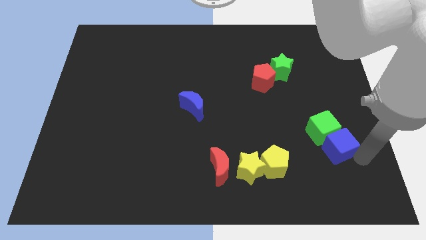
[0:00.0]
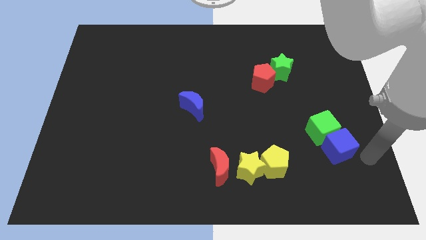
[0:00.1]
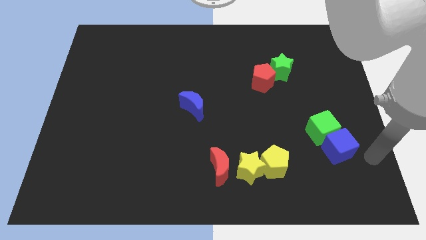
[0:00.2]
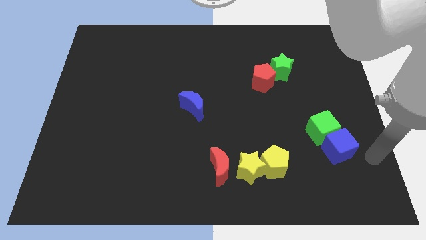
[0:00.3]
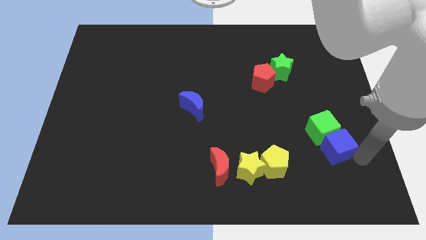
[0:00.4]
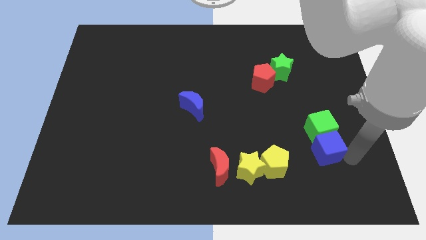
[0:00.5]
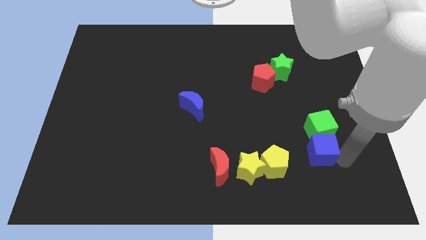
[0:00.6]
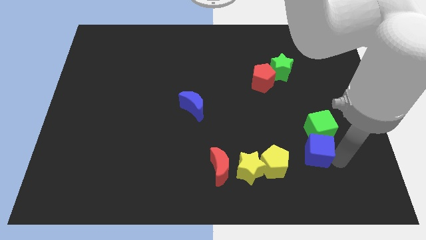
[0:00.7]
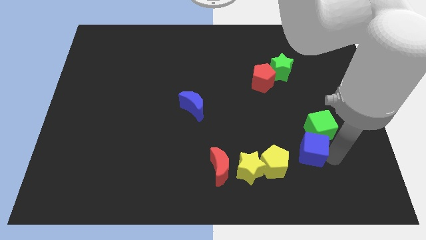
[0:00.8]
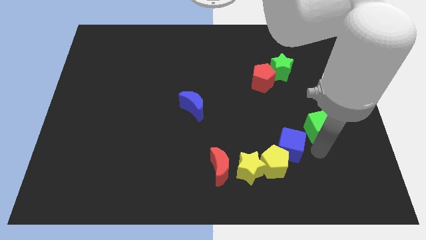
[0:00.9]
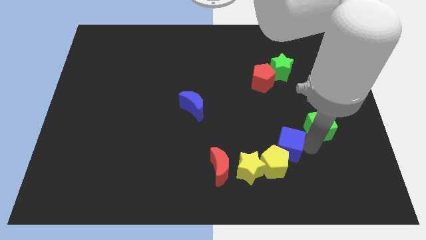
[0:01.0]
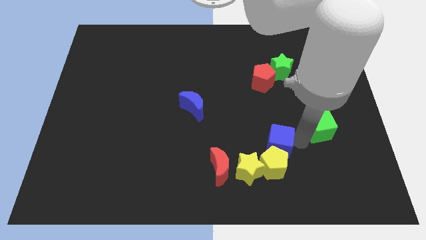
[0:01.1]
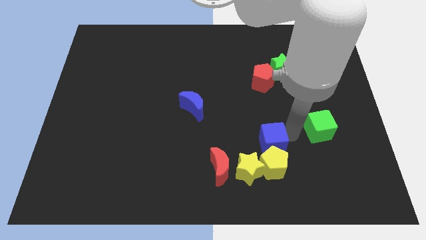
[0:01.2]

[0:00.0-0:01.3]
place the blue cube above the yellow pentagon

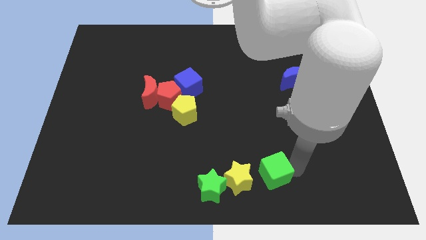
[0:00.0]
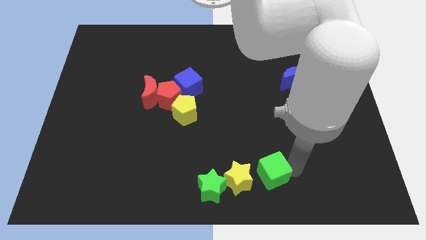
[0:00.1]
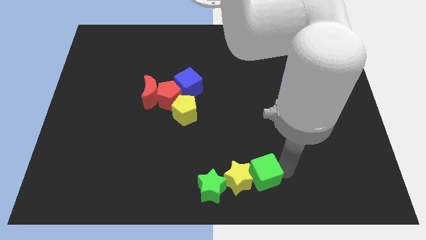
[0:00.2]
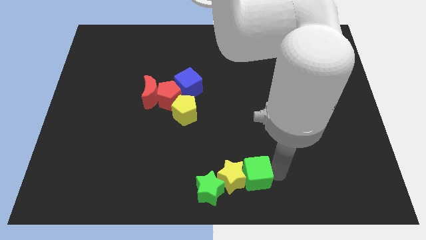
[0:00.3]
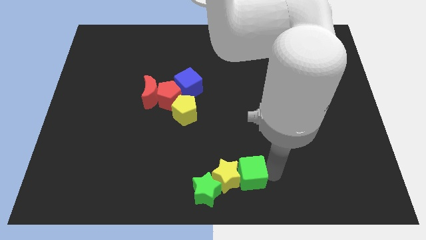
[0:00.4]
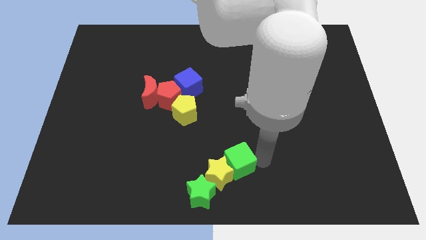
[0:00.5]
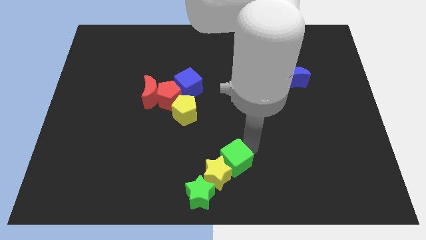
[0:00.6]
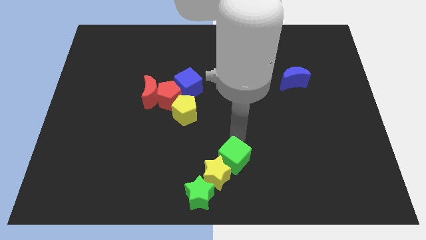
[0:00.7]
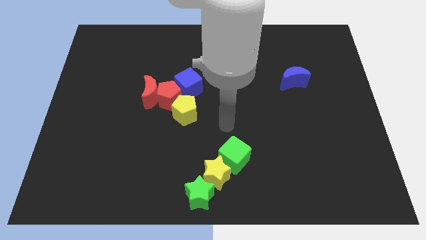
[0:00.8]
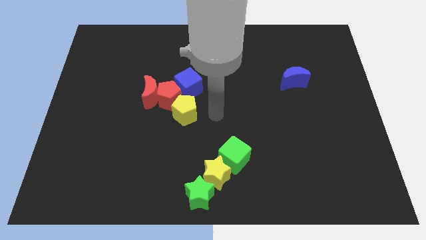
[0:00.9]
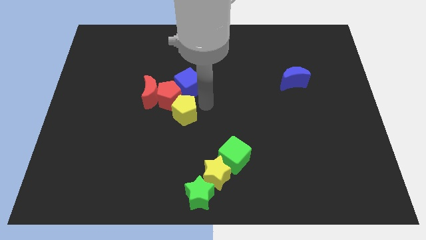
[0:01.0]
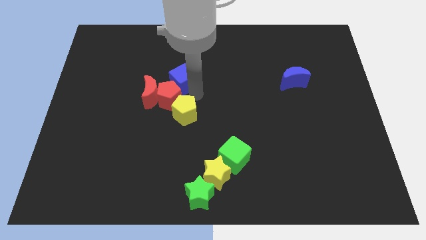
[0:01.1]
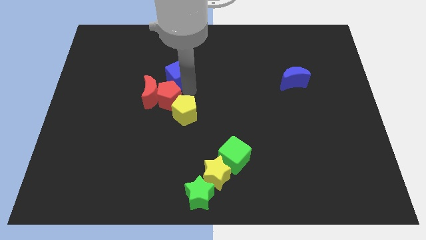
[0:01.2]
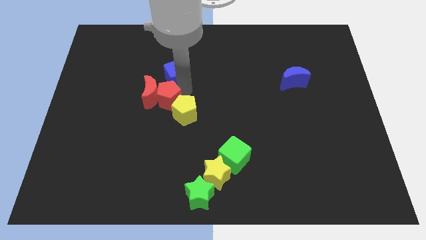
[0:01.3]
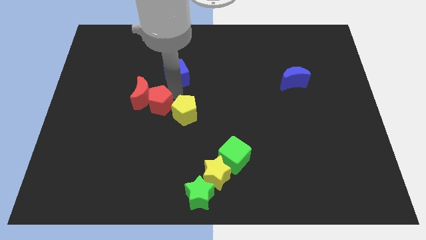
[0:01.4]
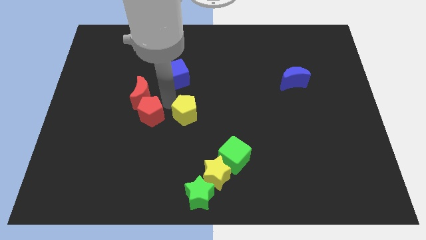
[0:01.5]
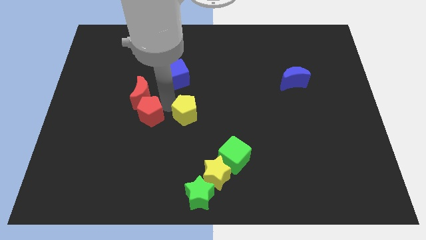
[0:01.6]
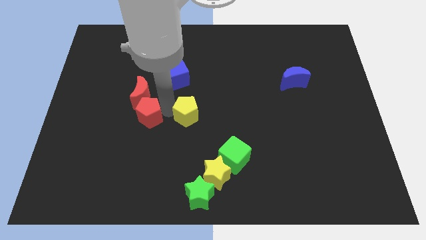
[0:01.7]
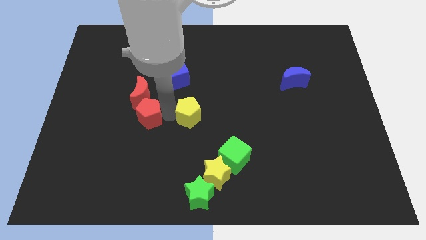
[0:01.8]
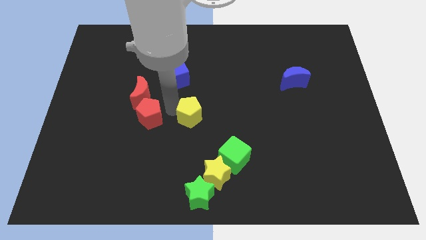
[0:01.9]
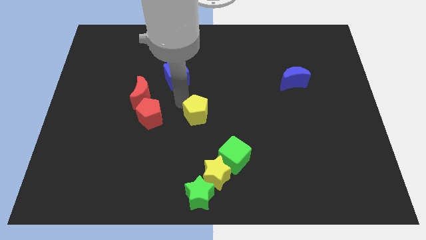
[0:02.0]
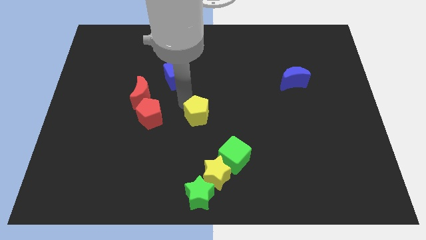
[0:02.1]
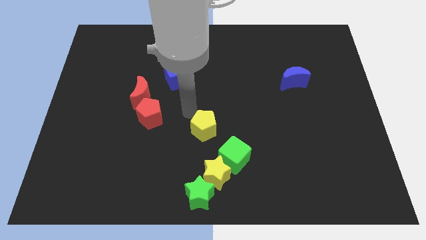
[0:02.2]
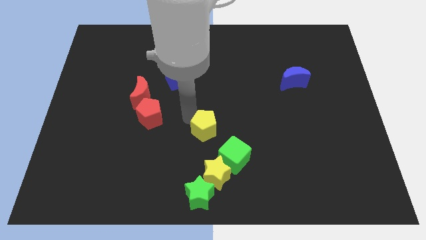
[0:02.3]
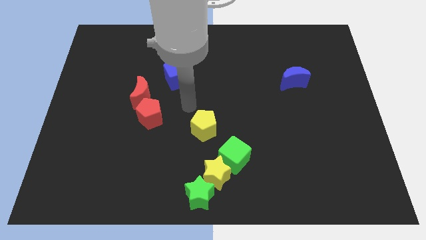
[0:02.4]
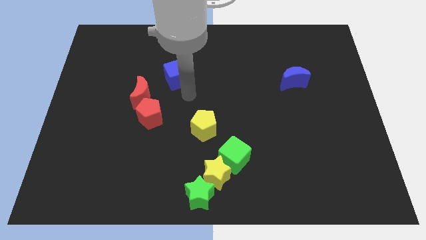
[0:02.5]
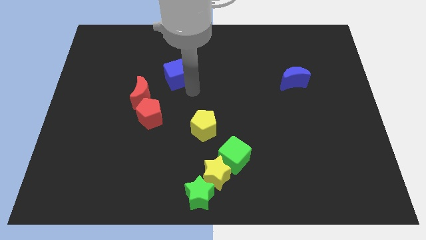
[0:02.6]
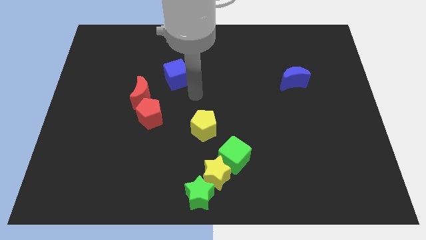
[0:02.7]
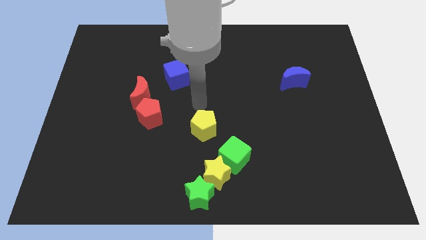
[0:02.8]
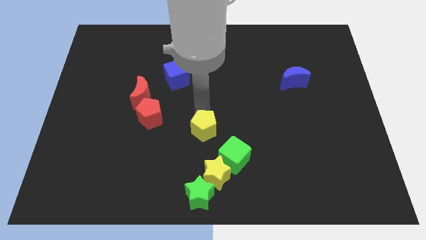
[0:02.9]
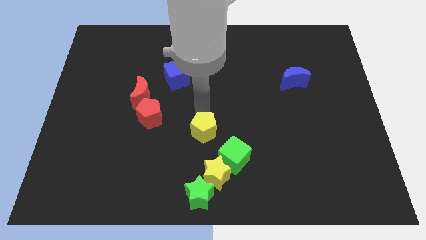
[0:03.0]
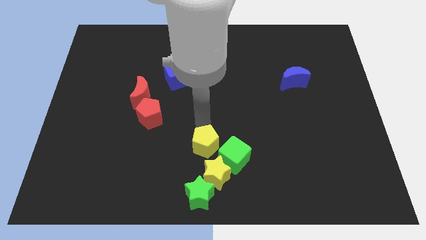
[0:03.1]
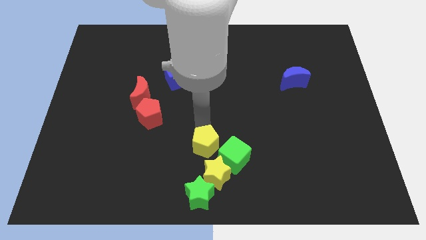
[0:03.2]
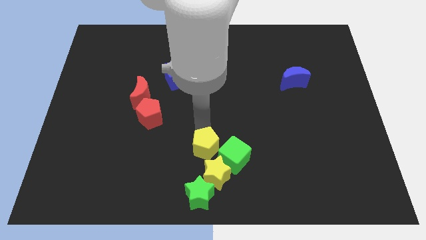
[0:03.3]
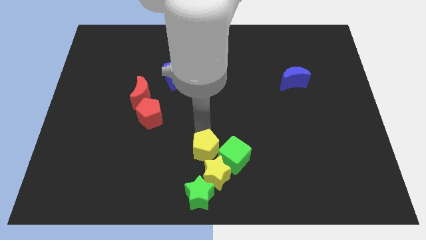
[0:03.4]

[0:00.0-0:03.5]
push yellow pentagon beside of the green cube

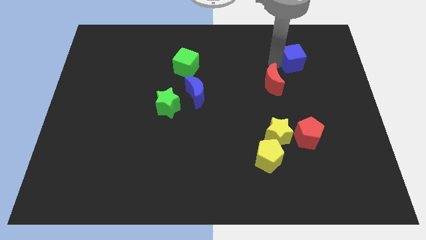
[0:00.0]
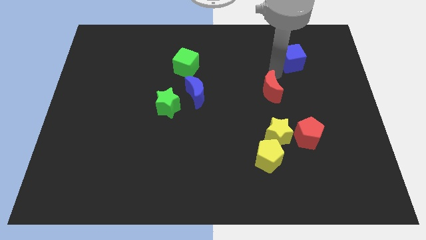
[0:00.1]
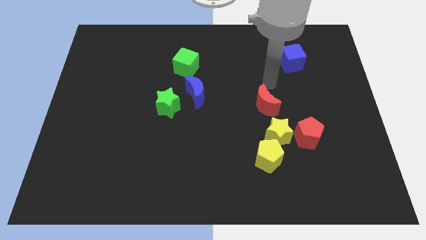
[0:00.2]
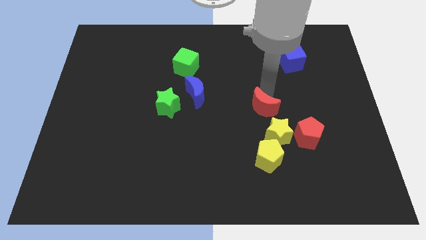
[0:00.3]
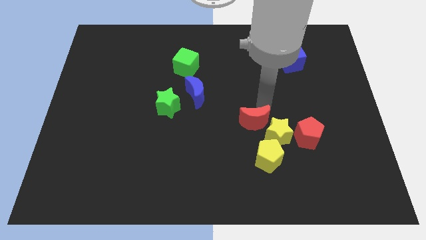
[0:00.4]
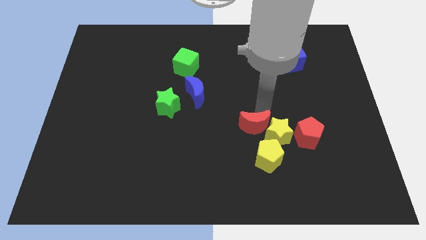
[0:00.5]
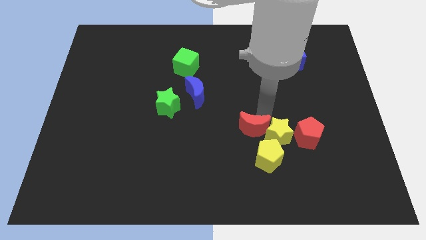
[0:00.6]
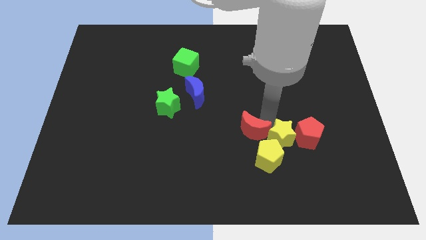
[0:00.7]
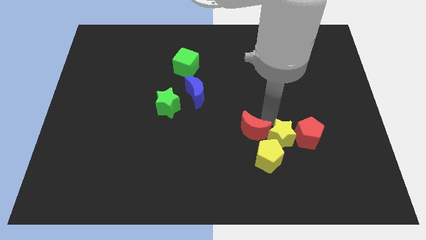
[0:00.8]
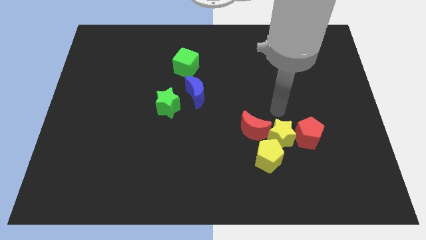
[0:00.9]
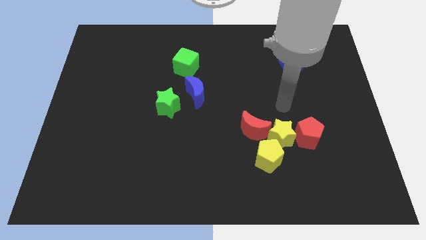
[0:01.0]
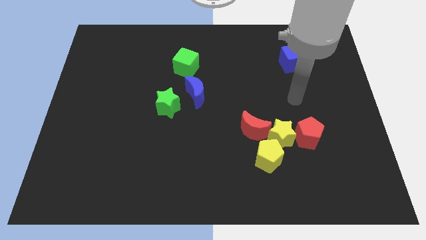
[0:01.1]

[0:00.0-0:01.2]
move the red moon to the left side of the yellow star

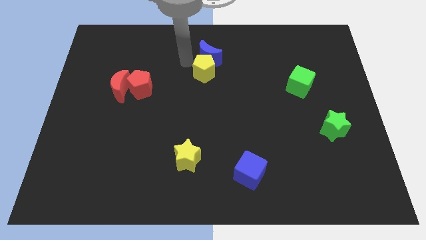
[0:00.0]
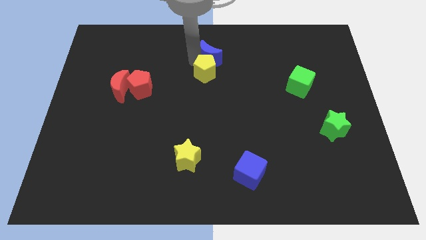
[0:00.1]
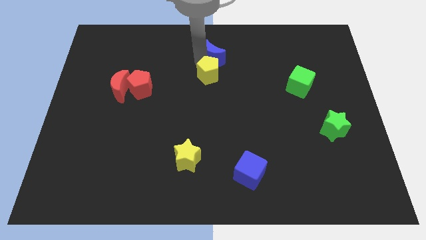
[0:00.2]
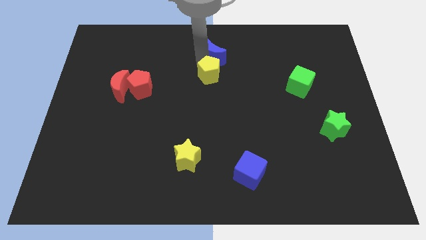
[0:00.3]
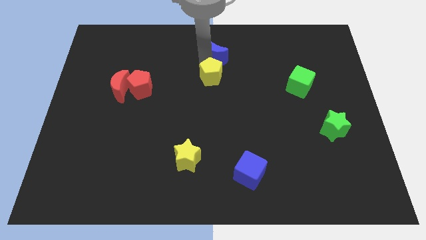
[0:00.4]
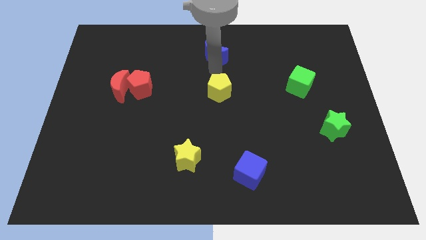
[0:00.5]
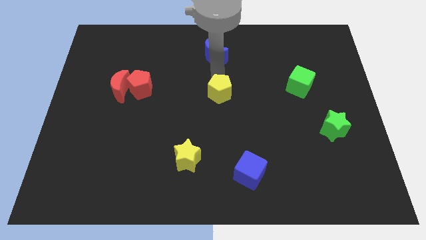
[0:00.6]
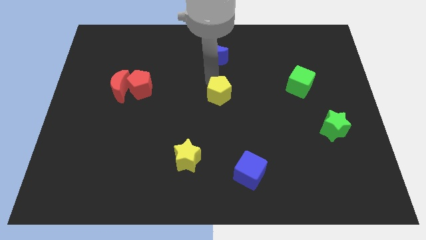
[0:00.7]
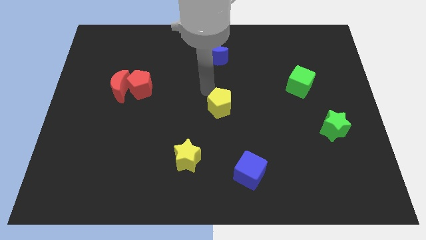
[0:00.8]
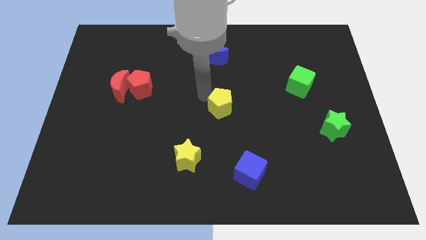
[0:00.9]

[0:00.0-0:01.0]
push the yellow pentagon to the centre of the board

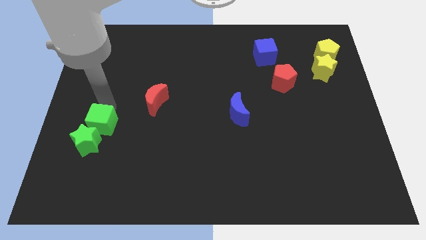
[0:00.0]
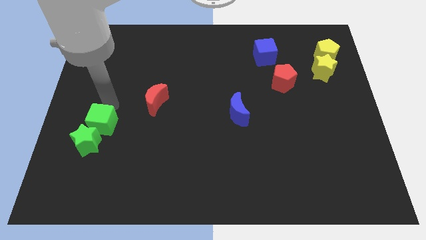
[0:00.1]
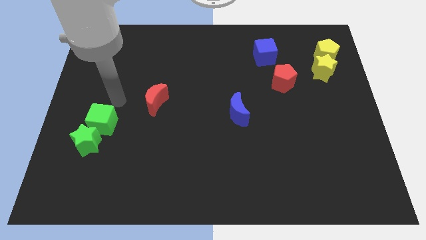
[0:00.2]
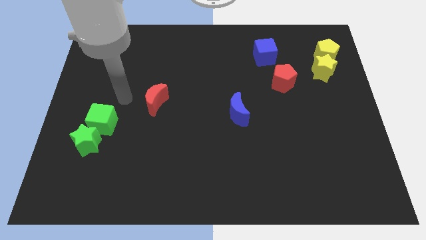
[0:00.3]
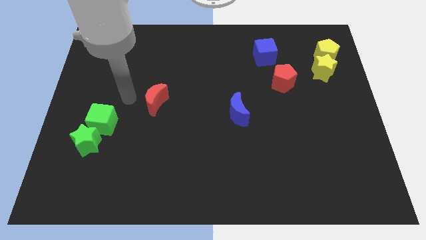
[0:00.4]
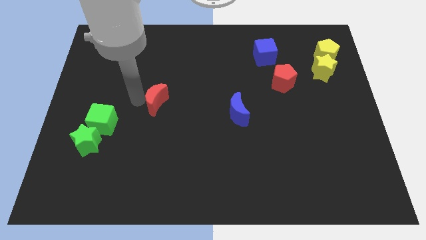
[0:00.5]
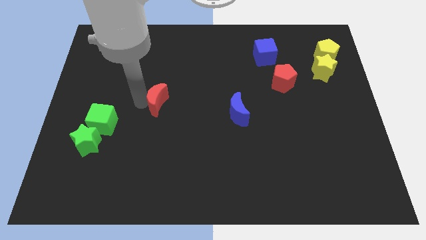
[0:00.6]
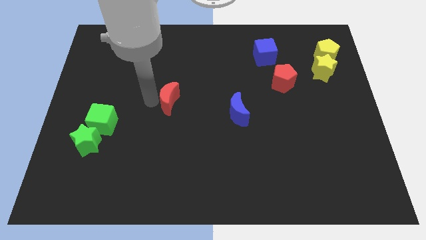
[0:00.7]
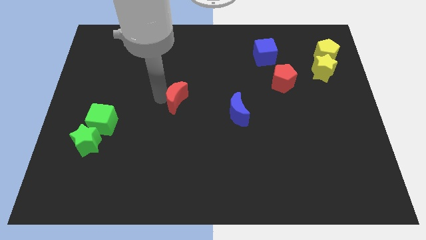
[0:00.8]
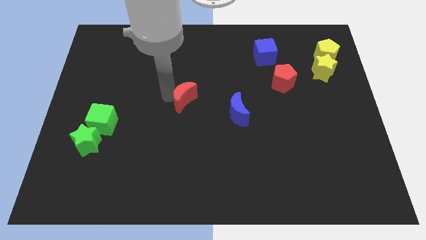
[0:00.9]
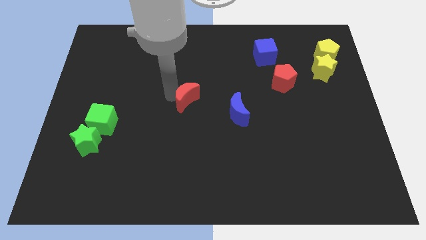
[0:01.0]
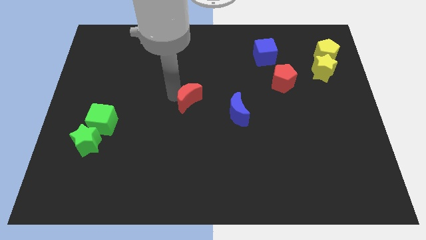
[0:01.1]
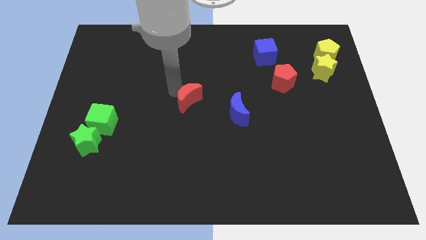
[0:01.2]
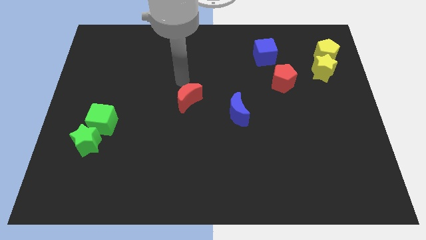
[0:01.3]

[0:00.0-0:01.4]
push the red moon towards the center

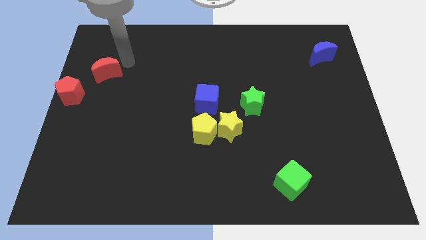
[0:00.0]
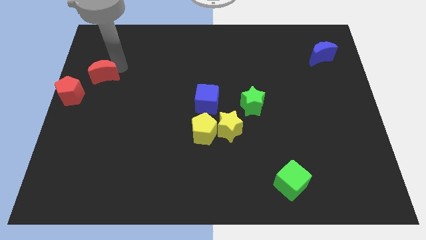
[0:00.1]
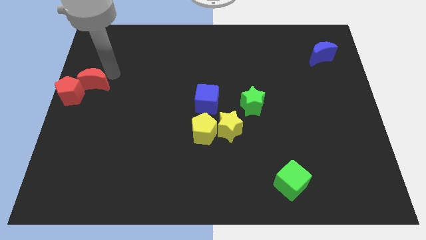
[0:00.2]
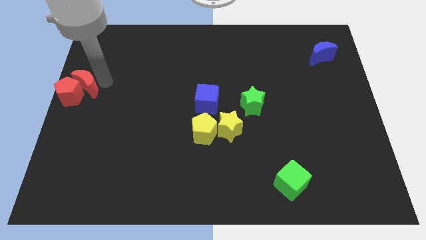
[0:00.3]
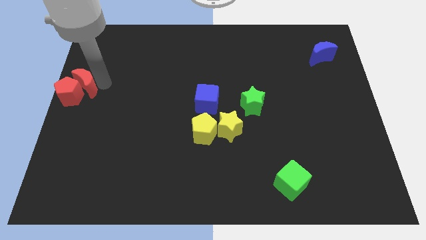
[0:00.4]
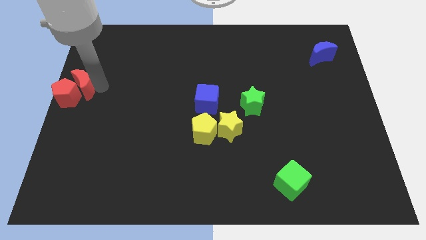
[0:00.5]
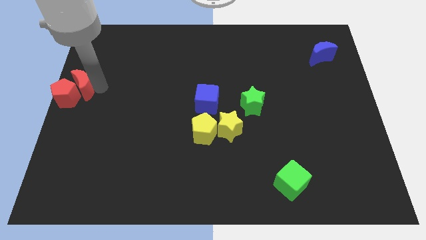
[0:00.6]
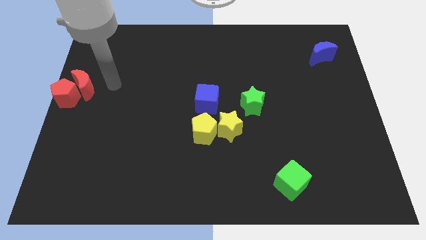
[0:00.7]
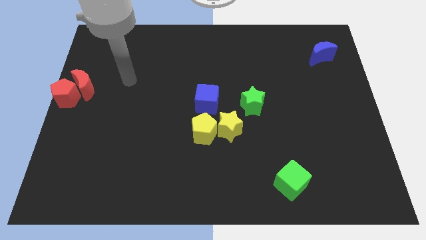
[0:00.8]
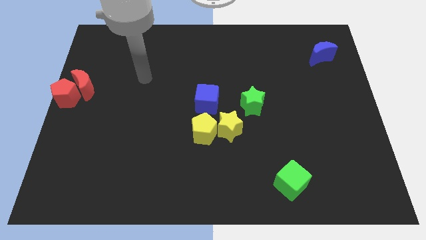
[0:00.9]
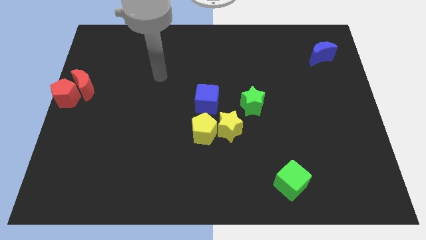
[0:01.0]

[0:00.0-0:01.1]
place the red crescent into the red pentagon
